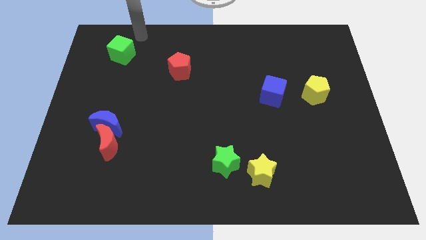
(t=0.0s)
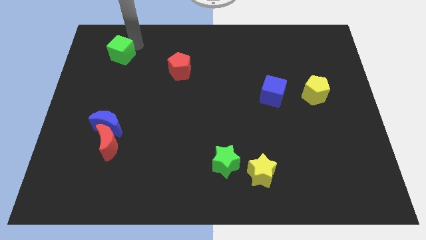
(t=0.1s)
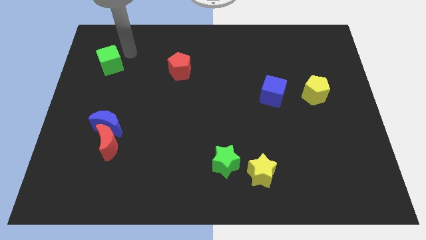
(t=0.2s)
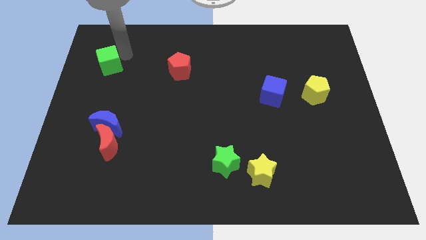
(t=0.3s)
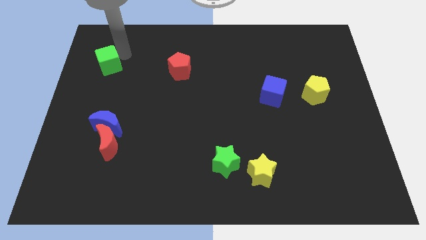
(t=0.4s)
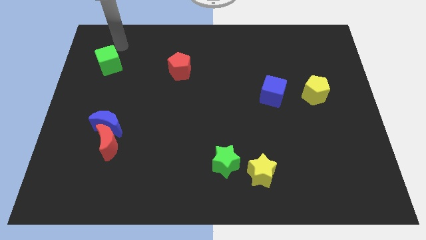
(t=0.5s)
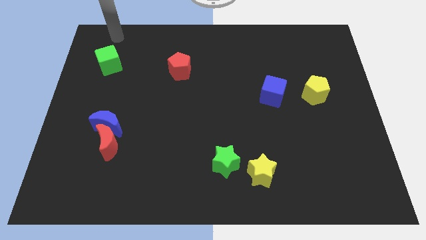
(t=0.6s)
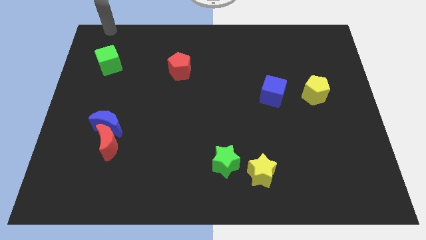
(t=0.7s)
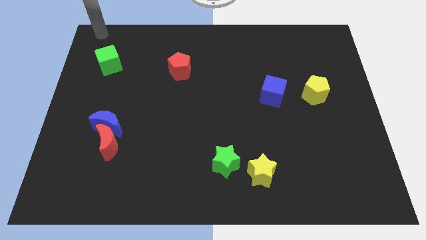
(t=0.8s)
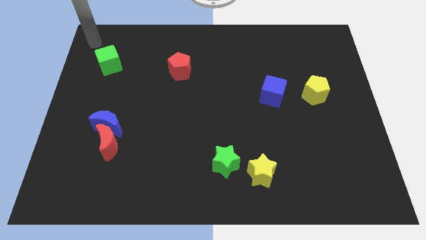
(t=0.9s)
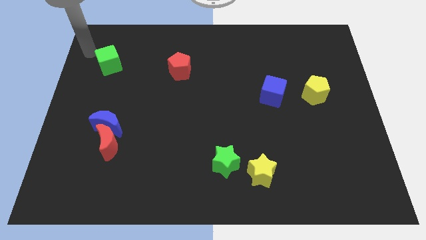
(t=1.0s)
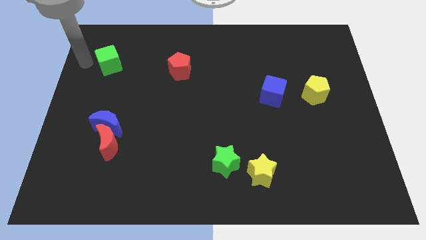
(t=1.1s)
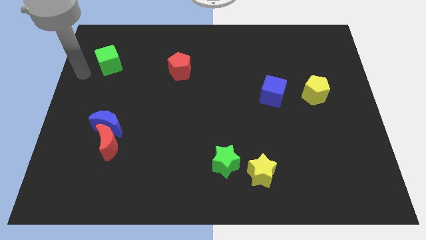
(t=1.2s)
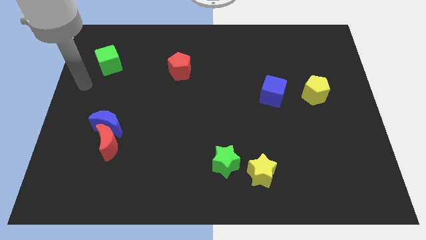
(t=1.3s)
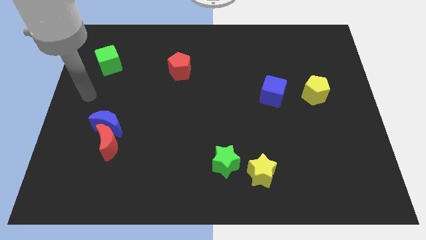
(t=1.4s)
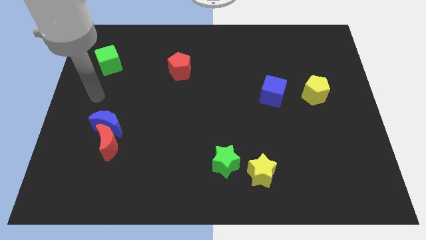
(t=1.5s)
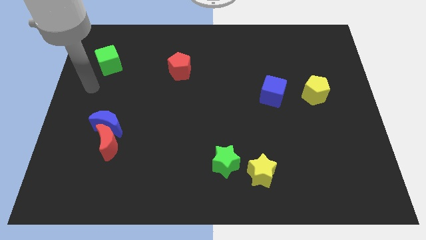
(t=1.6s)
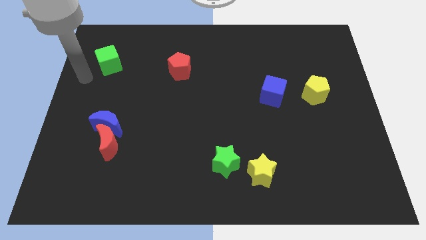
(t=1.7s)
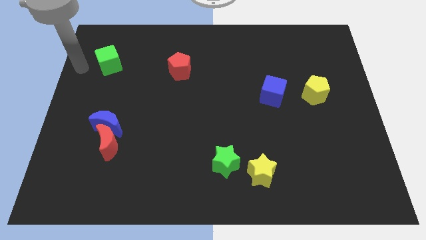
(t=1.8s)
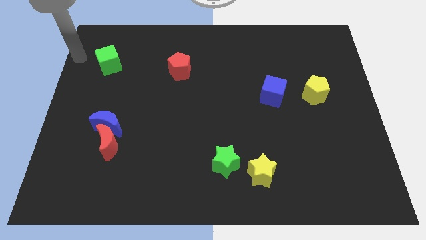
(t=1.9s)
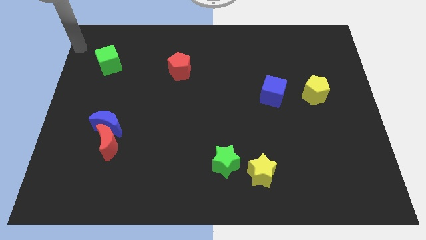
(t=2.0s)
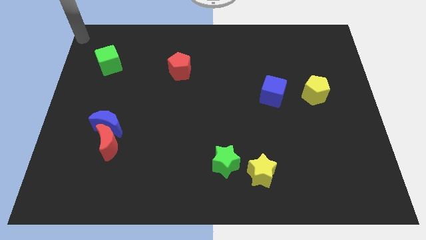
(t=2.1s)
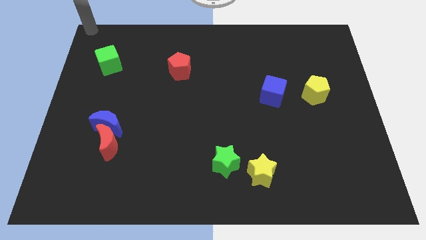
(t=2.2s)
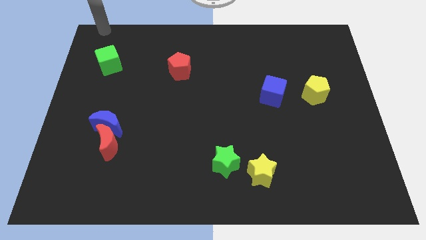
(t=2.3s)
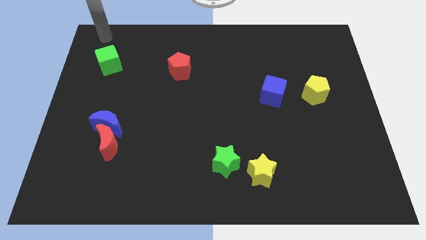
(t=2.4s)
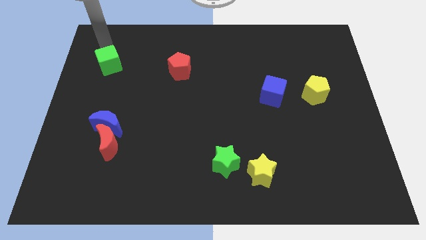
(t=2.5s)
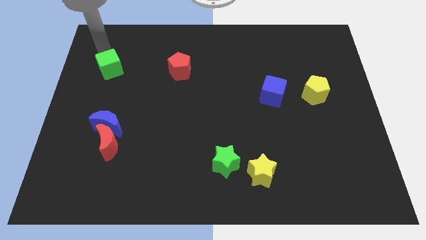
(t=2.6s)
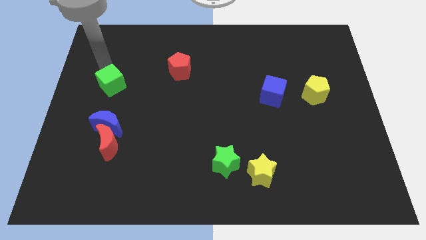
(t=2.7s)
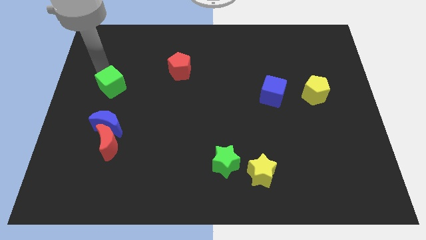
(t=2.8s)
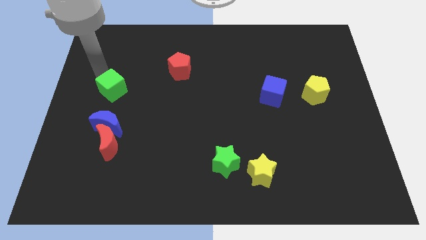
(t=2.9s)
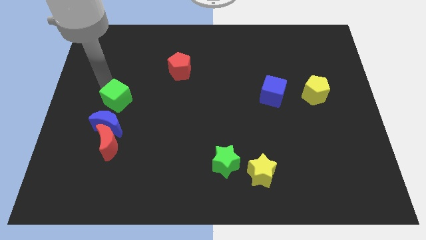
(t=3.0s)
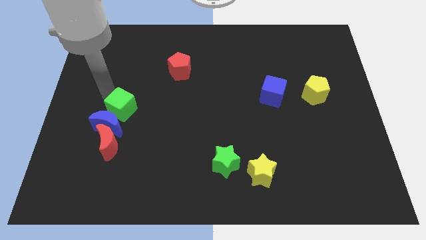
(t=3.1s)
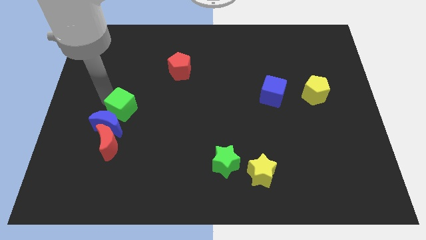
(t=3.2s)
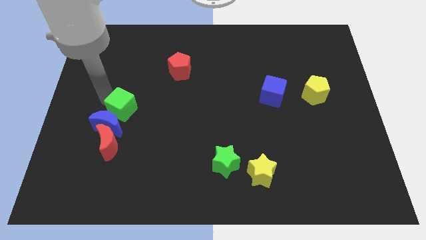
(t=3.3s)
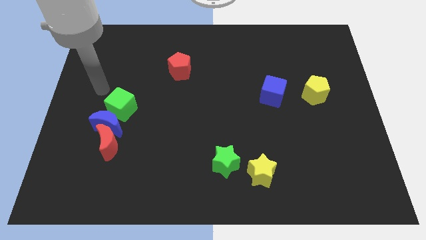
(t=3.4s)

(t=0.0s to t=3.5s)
place the green cube at the top of blue moon

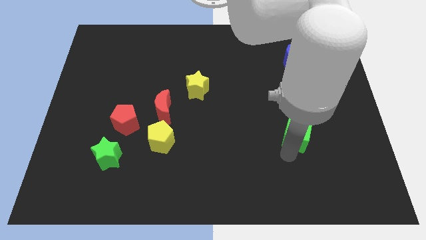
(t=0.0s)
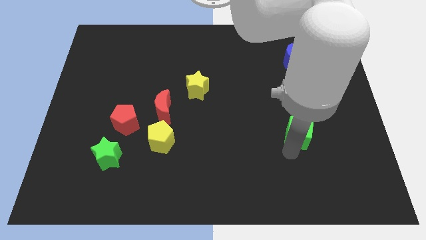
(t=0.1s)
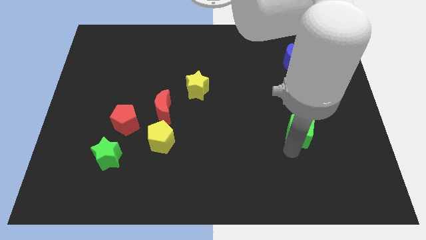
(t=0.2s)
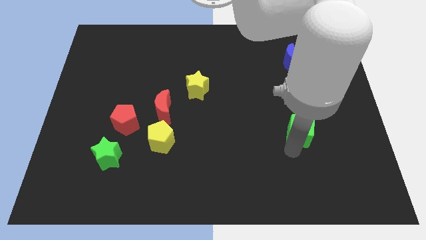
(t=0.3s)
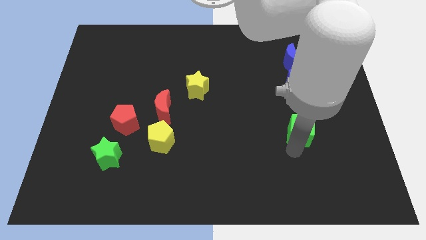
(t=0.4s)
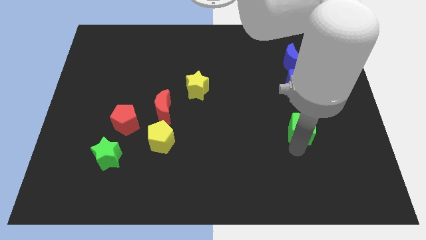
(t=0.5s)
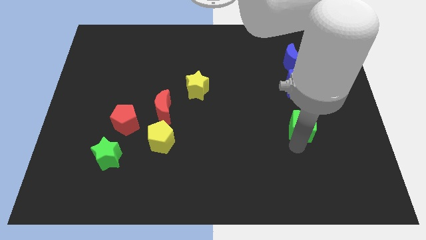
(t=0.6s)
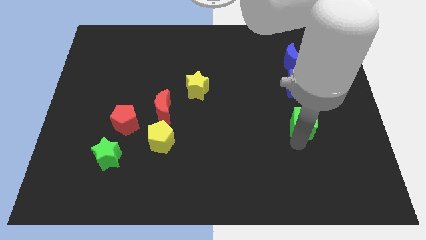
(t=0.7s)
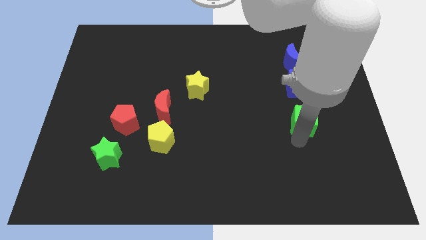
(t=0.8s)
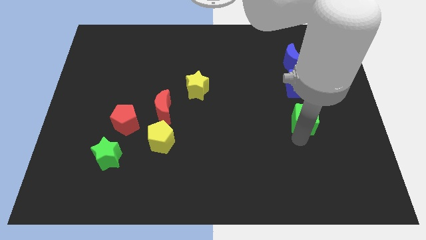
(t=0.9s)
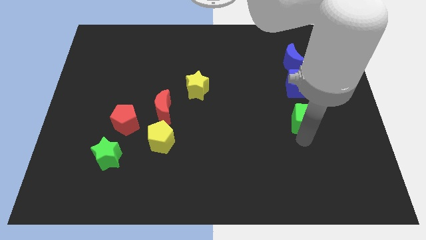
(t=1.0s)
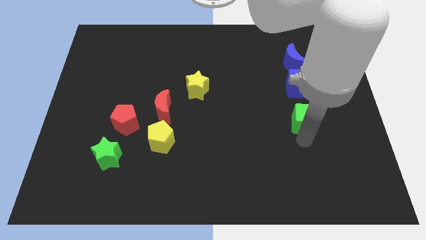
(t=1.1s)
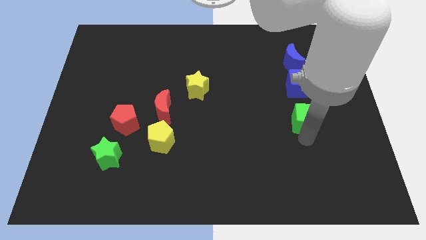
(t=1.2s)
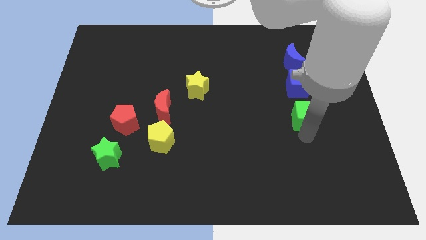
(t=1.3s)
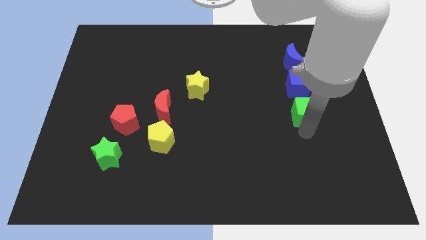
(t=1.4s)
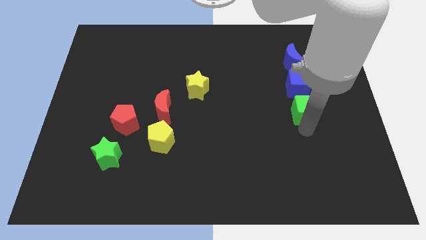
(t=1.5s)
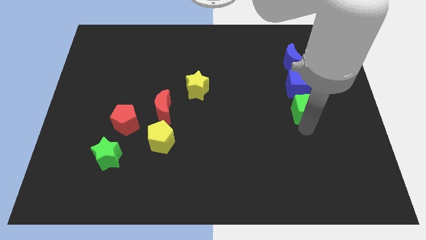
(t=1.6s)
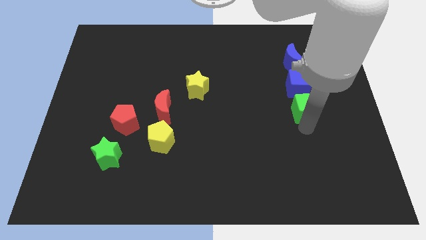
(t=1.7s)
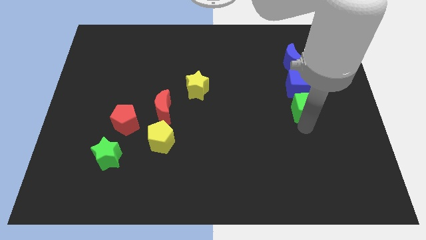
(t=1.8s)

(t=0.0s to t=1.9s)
place the green cube below the blue cube

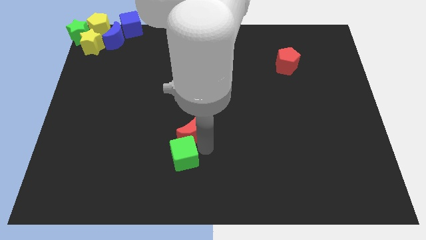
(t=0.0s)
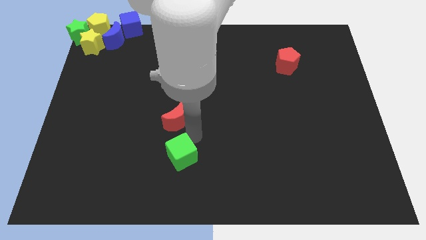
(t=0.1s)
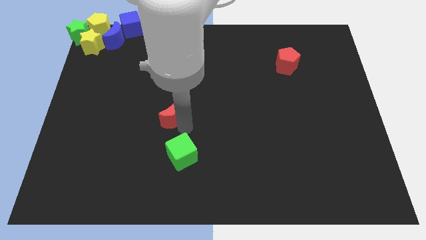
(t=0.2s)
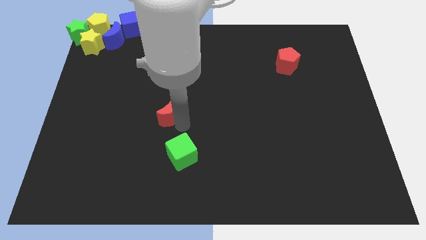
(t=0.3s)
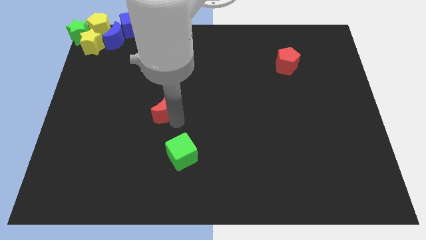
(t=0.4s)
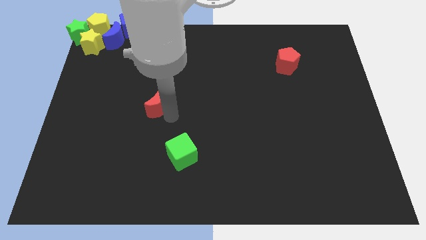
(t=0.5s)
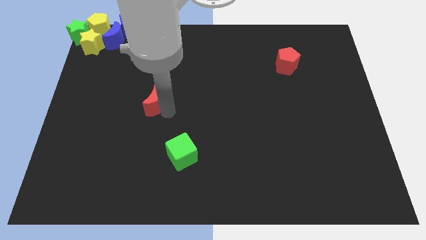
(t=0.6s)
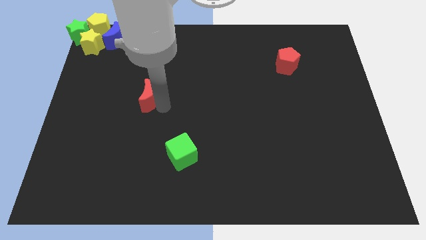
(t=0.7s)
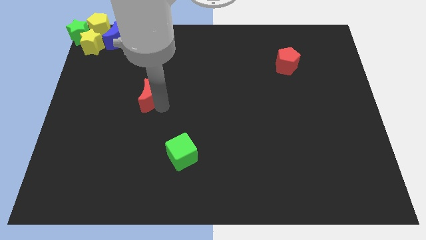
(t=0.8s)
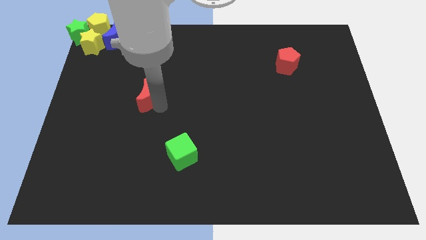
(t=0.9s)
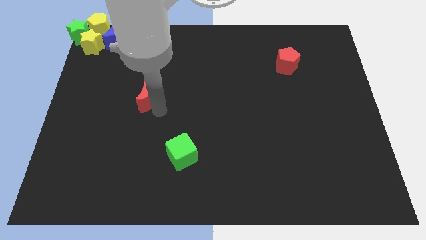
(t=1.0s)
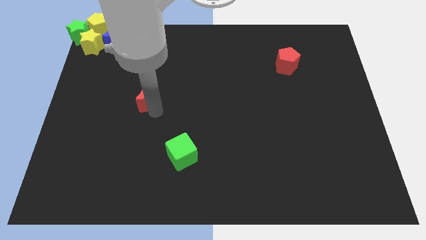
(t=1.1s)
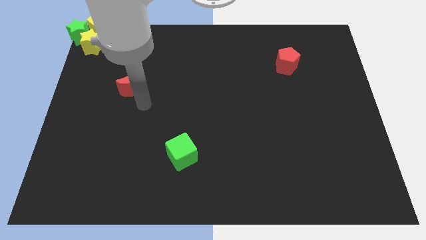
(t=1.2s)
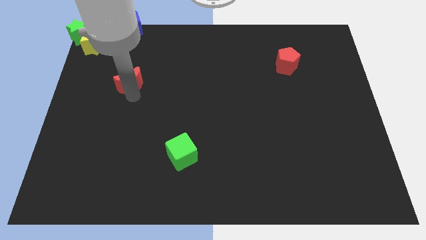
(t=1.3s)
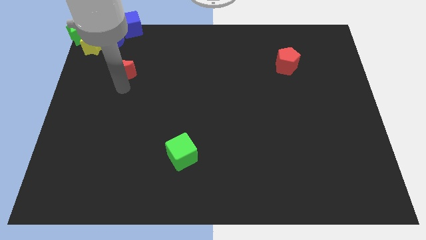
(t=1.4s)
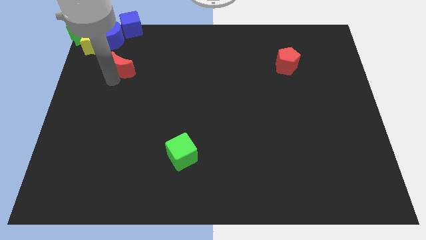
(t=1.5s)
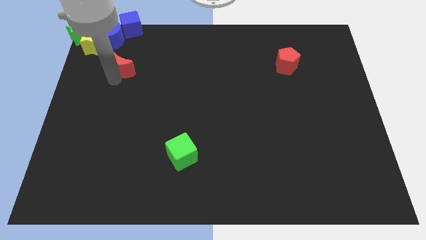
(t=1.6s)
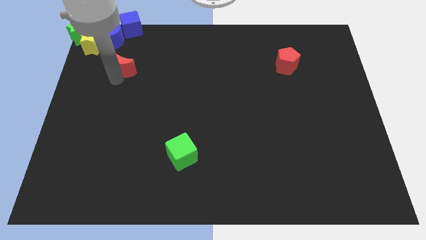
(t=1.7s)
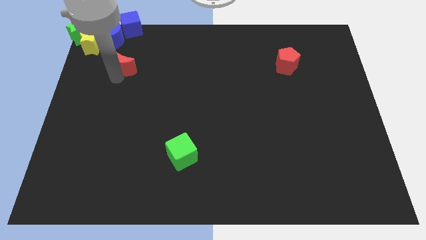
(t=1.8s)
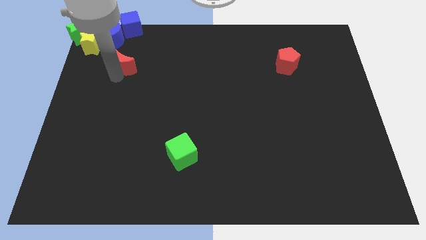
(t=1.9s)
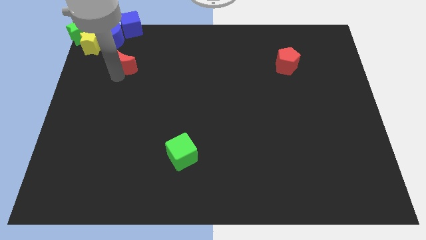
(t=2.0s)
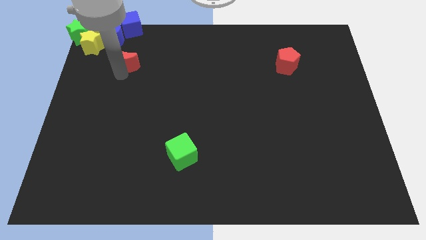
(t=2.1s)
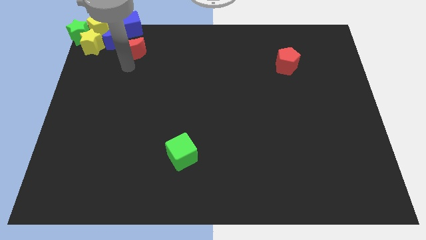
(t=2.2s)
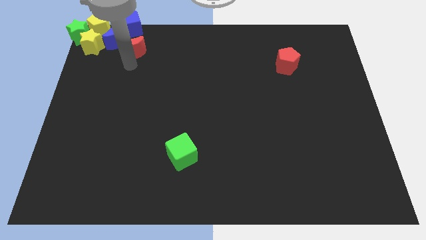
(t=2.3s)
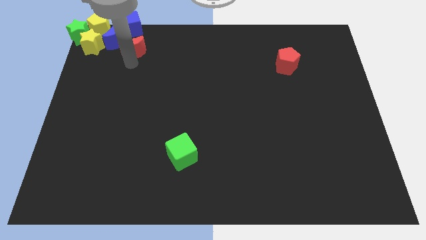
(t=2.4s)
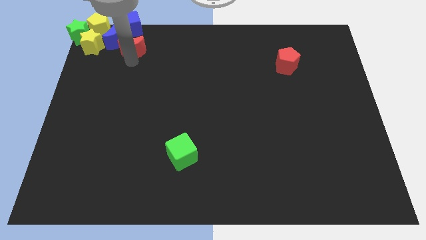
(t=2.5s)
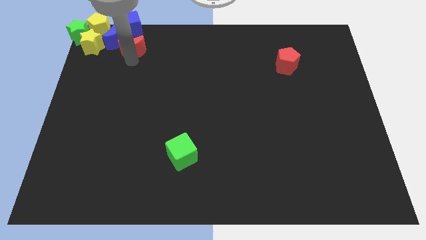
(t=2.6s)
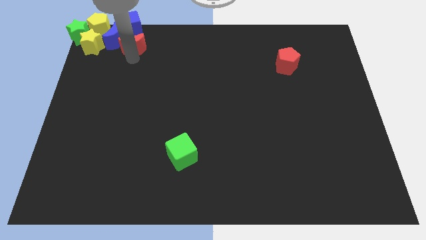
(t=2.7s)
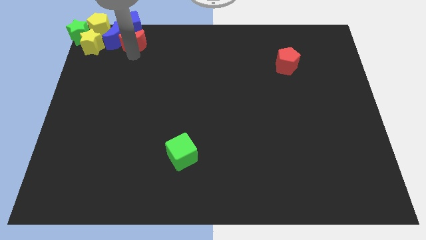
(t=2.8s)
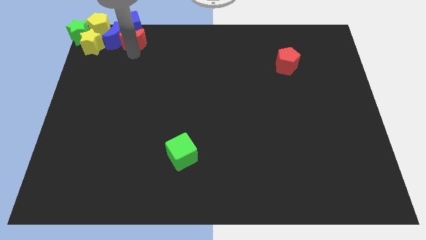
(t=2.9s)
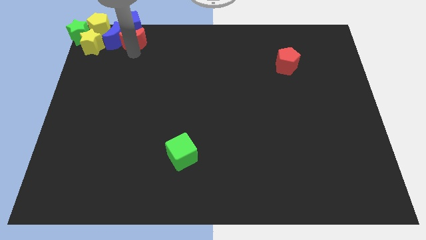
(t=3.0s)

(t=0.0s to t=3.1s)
push the red crescent to the bottom of the blue cube

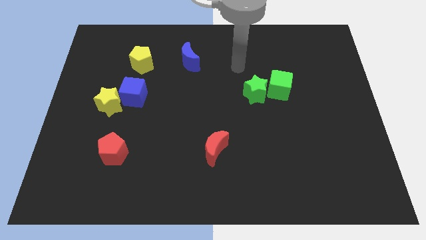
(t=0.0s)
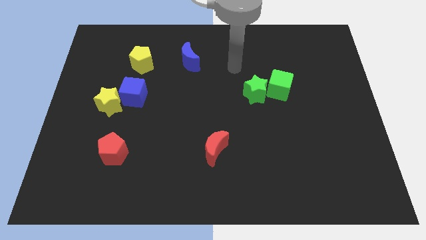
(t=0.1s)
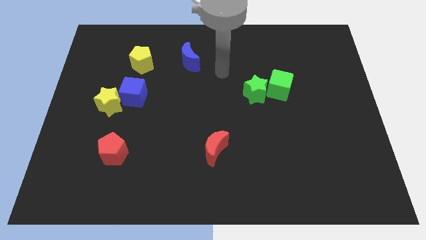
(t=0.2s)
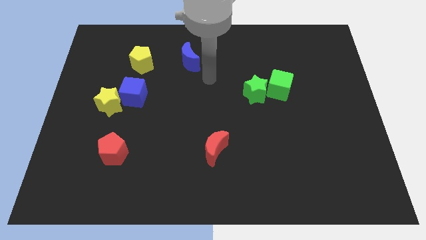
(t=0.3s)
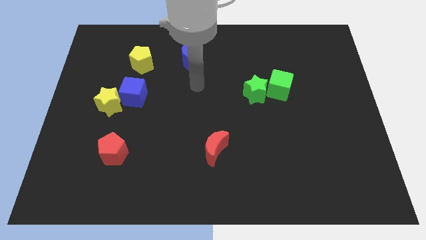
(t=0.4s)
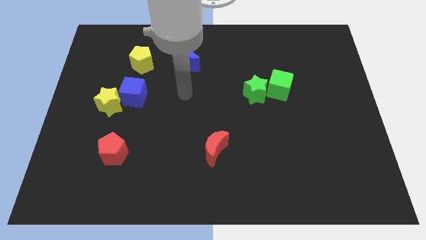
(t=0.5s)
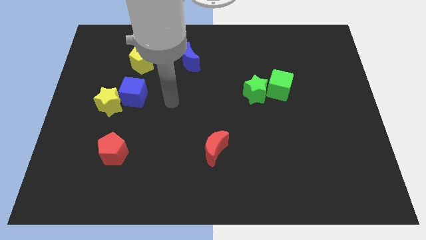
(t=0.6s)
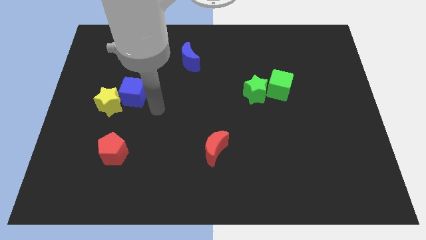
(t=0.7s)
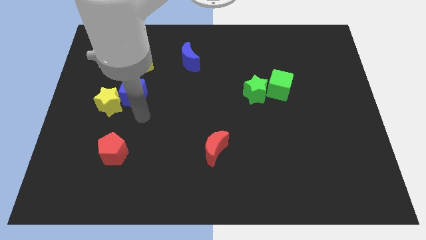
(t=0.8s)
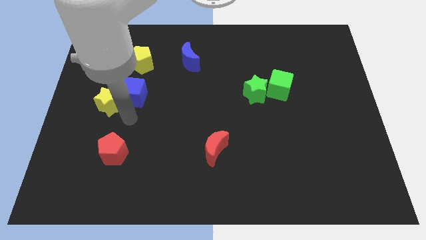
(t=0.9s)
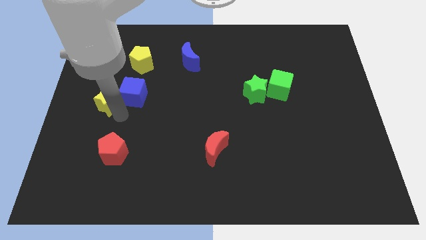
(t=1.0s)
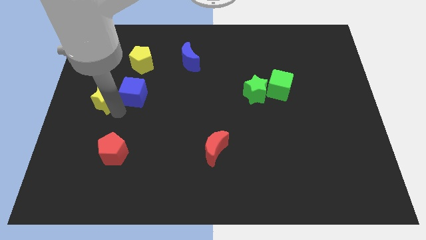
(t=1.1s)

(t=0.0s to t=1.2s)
push the arm towards the yellow star
